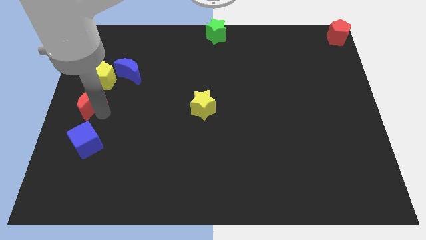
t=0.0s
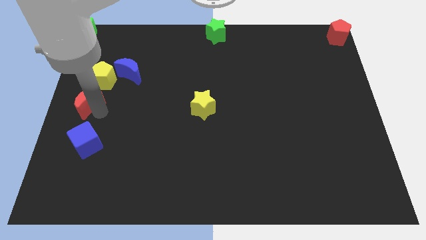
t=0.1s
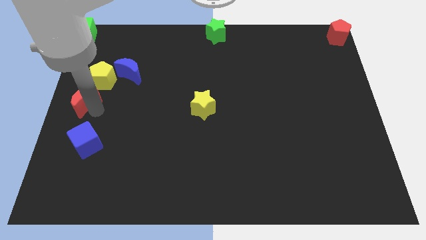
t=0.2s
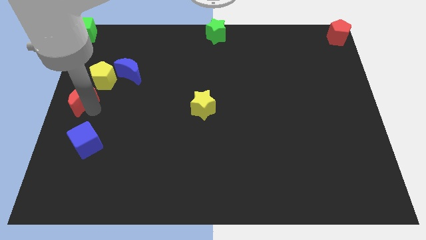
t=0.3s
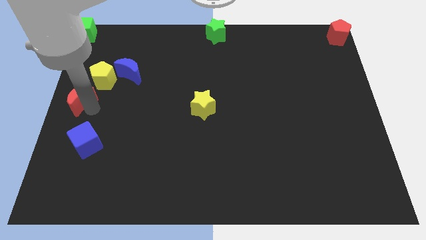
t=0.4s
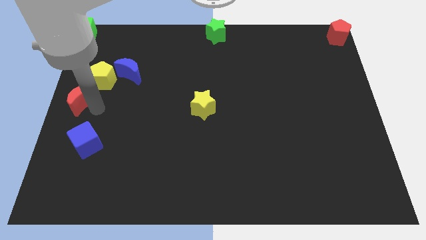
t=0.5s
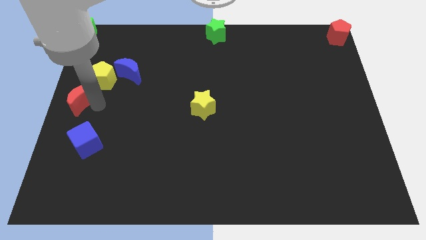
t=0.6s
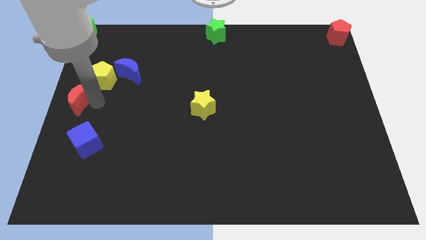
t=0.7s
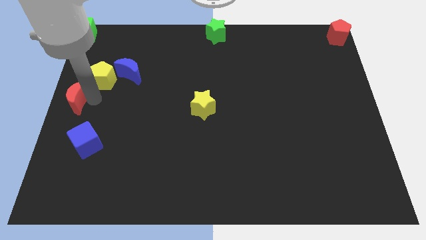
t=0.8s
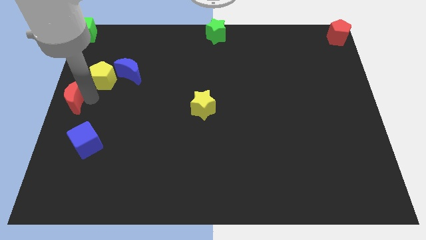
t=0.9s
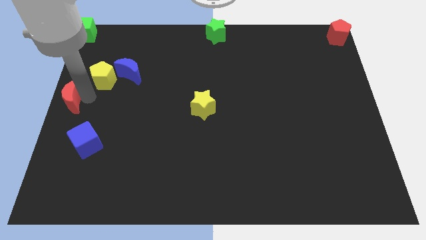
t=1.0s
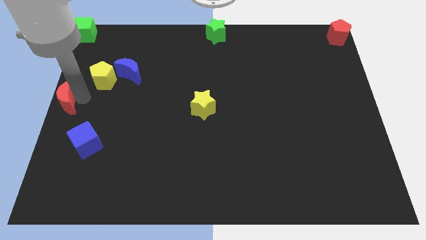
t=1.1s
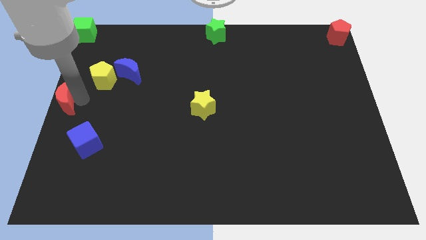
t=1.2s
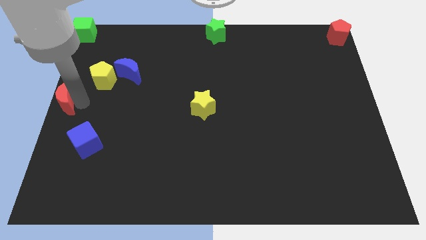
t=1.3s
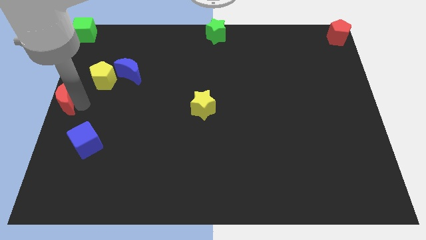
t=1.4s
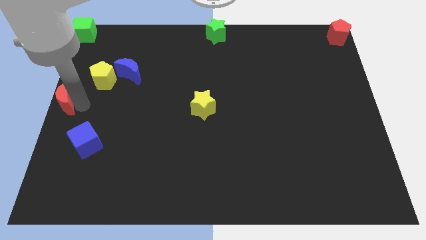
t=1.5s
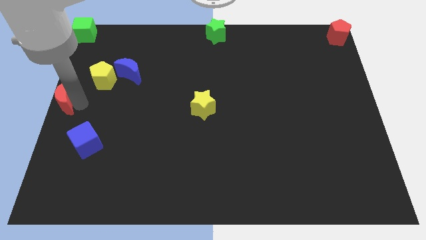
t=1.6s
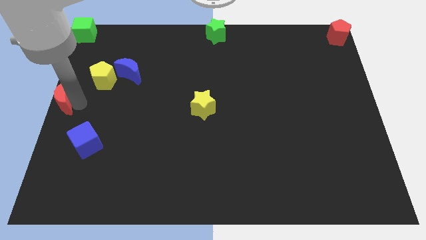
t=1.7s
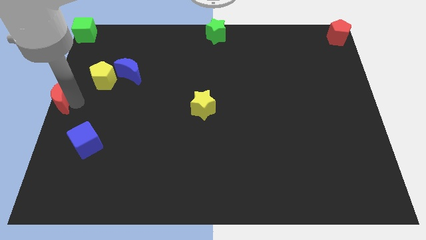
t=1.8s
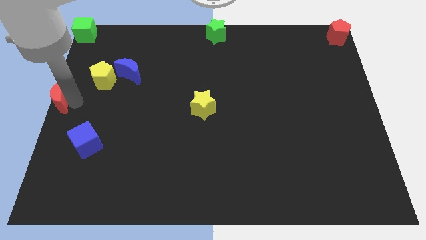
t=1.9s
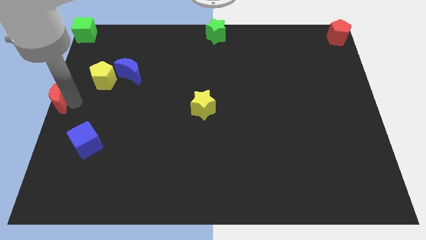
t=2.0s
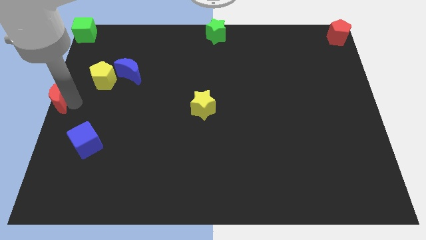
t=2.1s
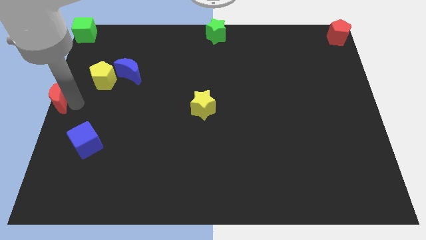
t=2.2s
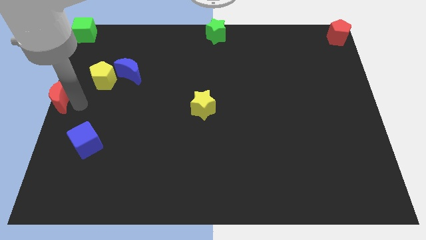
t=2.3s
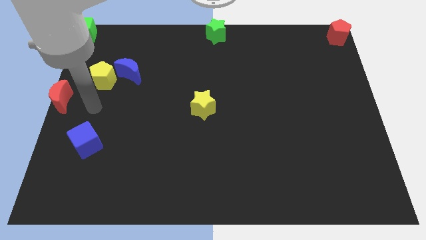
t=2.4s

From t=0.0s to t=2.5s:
push the red moon away from the middle of yellow pentagon and blue cube

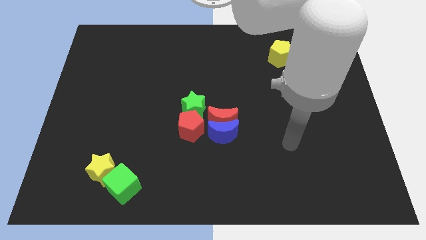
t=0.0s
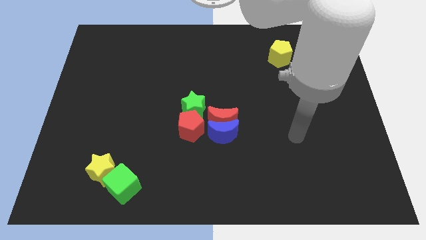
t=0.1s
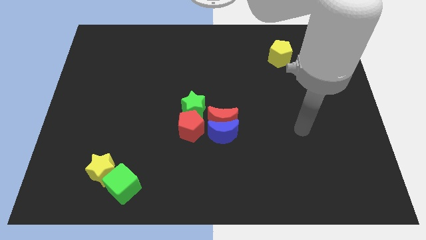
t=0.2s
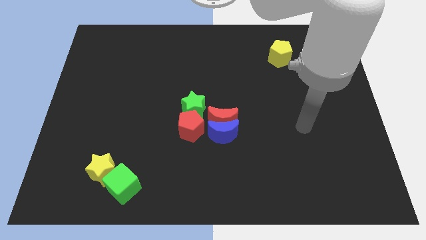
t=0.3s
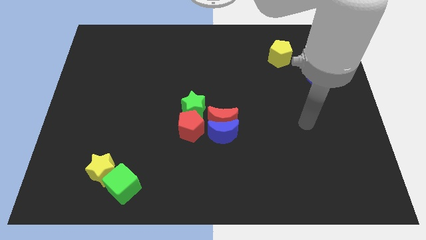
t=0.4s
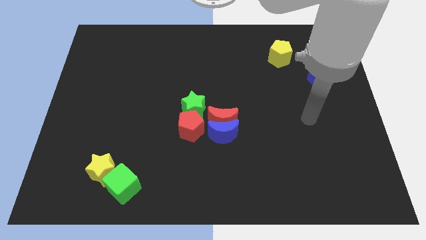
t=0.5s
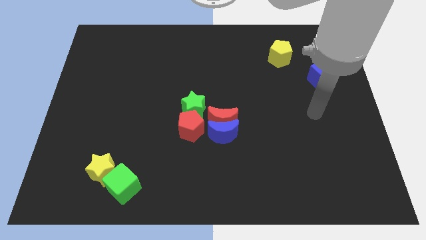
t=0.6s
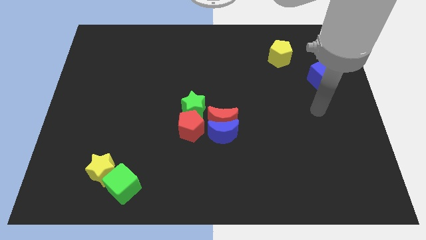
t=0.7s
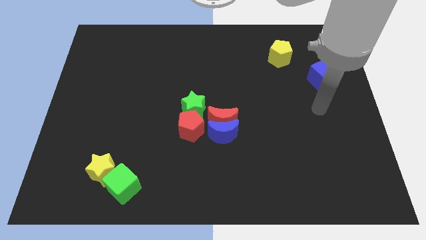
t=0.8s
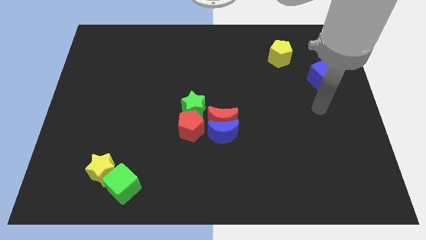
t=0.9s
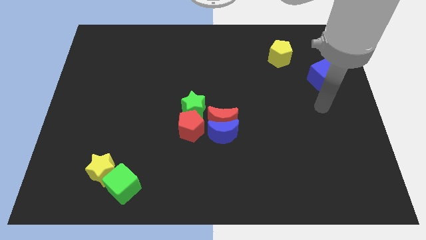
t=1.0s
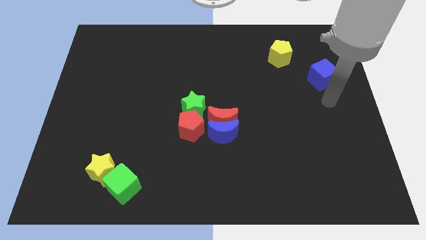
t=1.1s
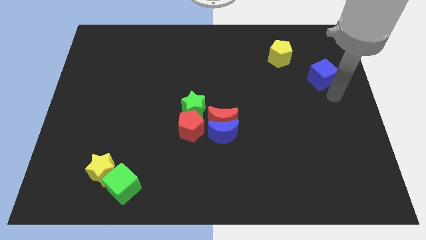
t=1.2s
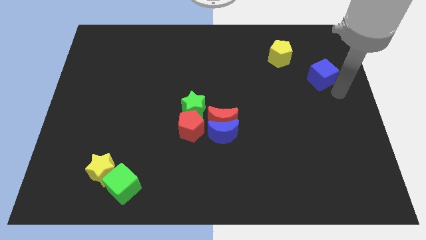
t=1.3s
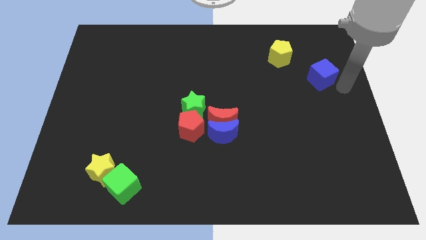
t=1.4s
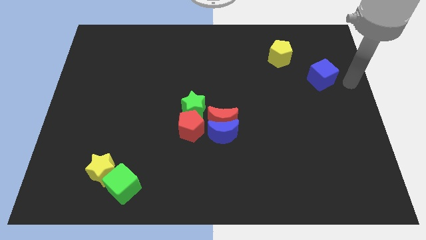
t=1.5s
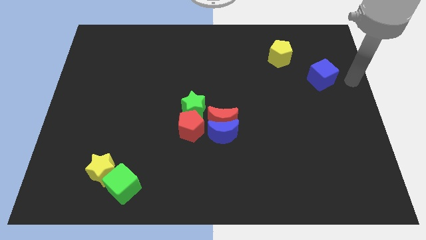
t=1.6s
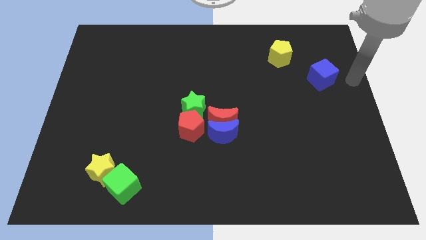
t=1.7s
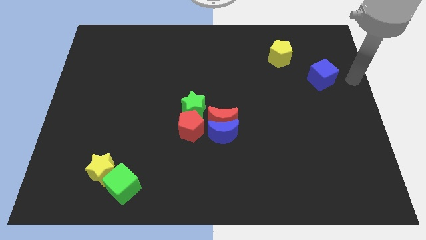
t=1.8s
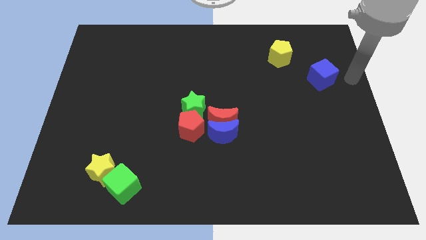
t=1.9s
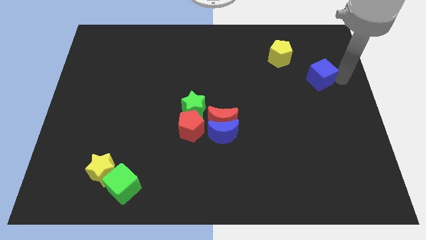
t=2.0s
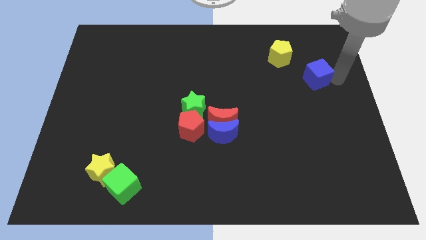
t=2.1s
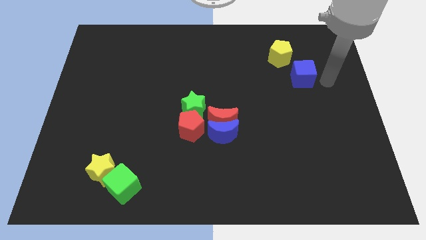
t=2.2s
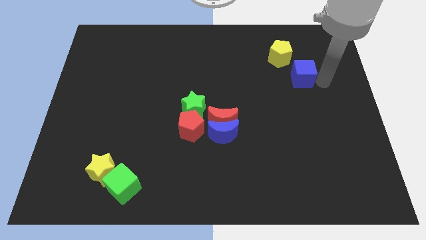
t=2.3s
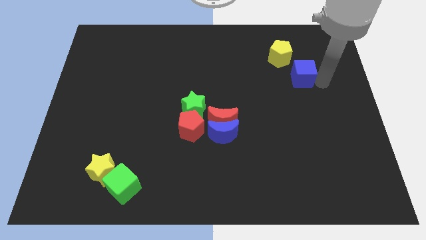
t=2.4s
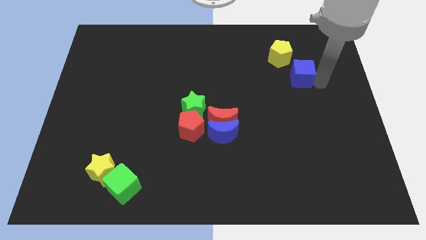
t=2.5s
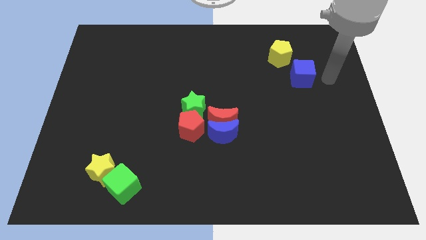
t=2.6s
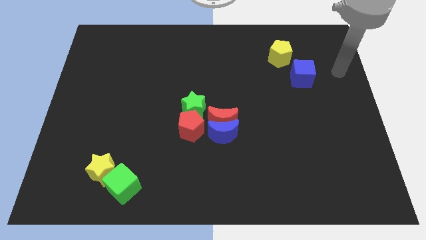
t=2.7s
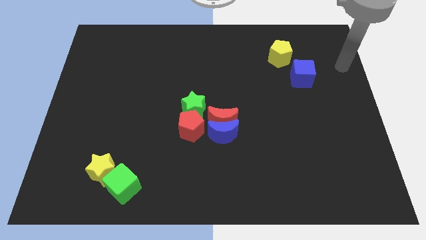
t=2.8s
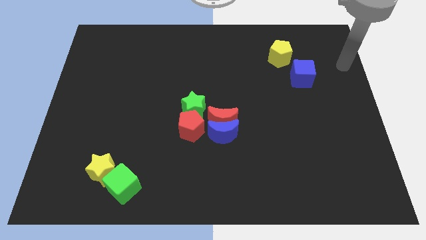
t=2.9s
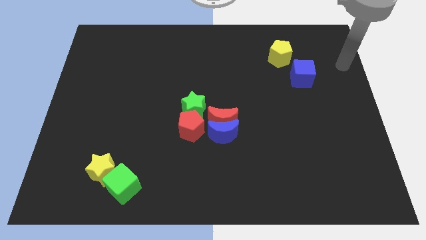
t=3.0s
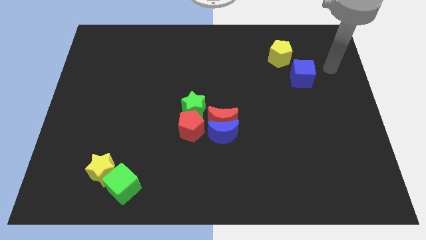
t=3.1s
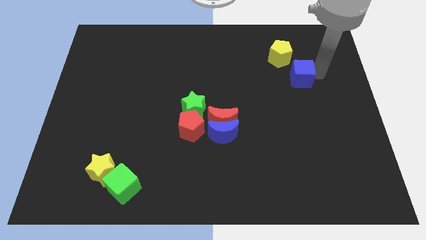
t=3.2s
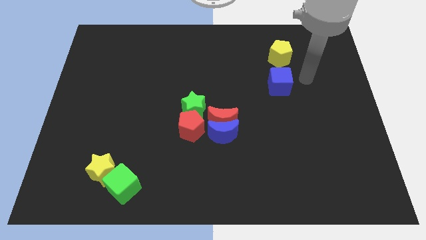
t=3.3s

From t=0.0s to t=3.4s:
place the blue cube to the bottom side of the yellow pentagon

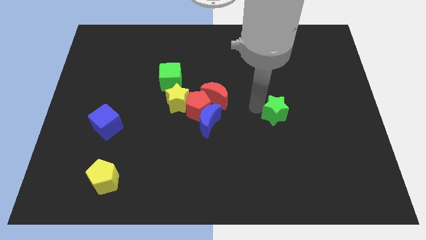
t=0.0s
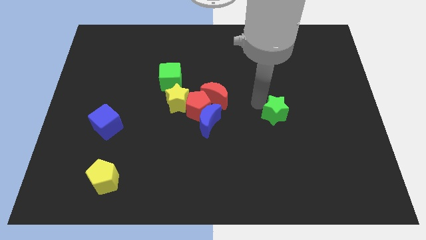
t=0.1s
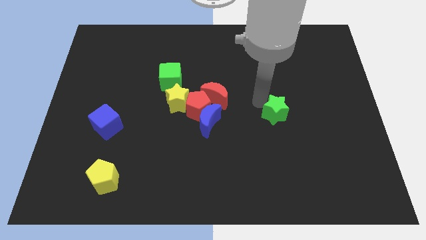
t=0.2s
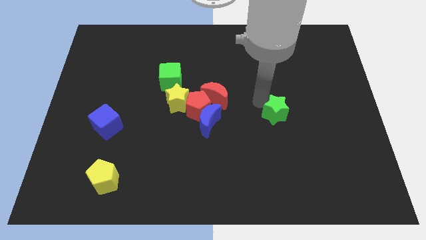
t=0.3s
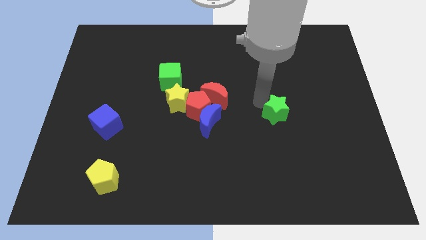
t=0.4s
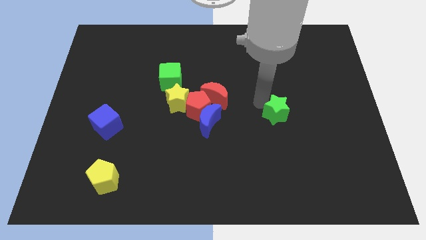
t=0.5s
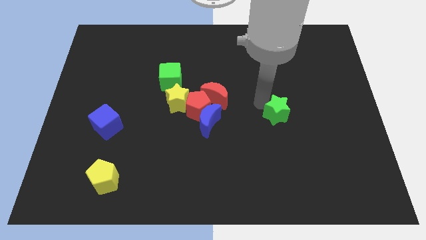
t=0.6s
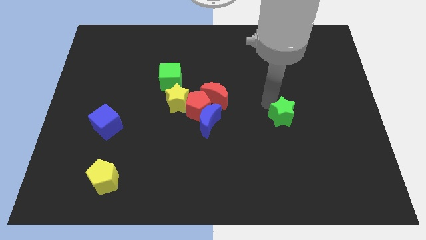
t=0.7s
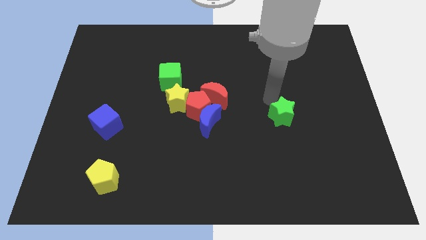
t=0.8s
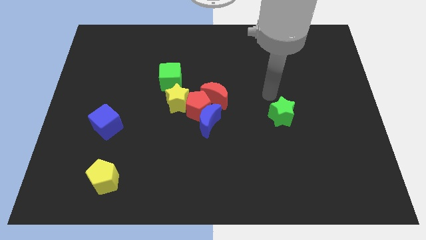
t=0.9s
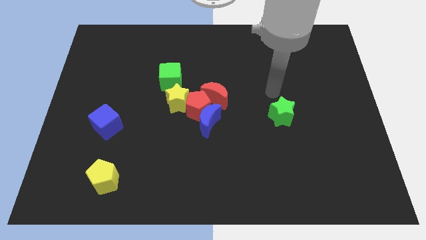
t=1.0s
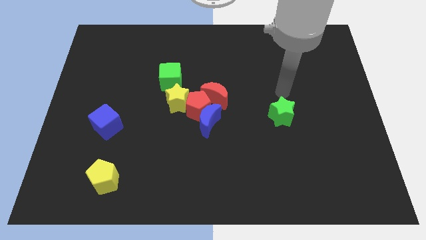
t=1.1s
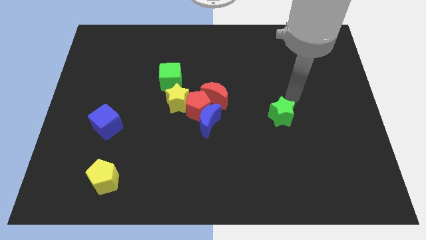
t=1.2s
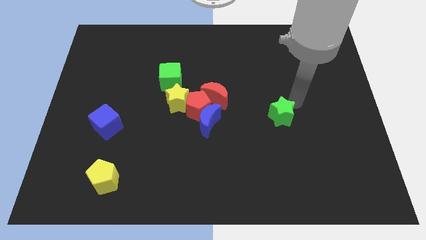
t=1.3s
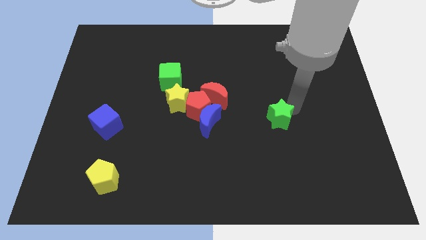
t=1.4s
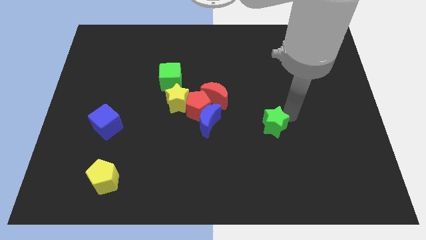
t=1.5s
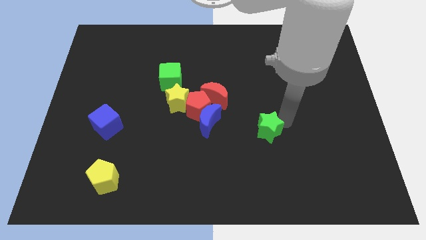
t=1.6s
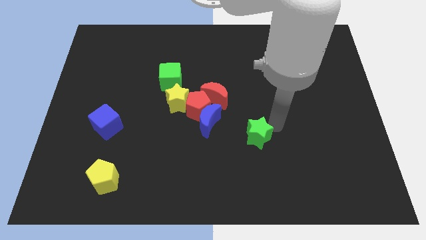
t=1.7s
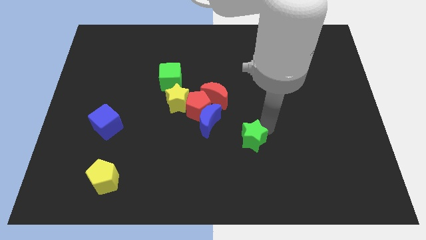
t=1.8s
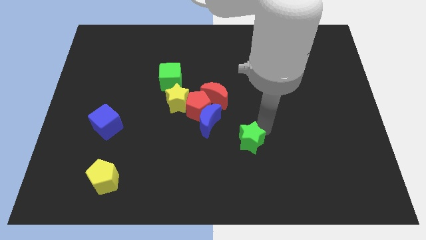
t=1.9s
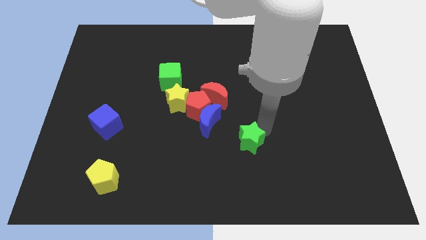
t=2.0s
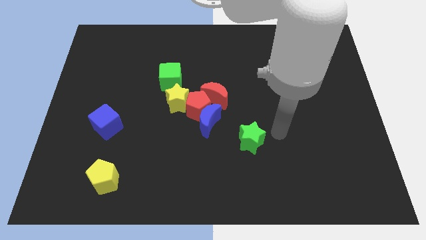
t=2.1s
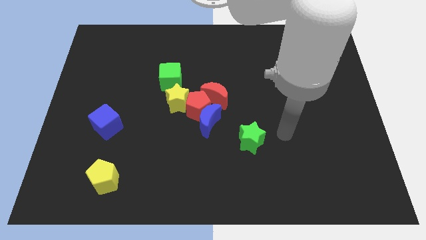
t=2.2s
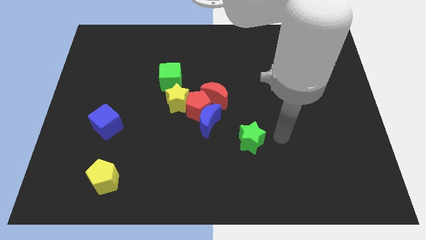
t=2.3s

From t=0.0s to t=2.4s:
drag green star diagonally downwards

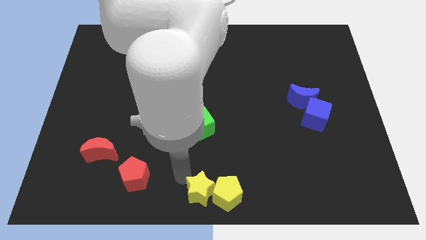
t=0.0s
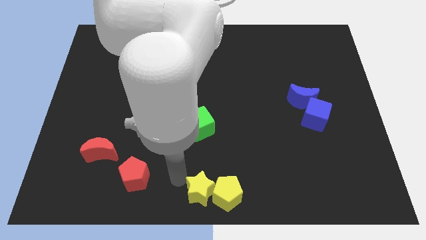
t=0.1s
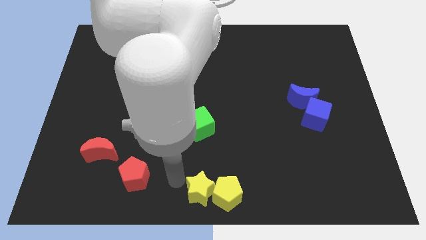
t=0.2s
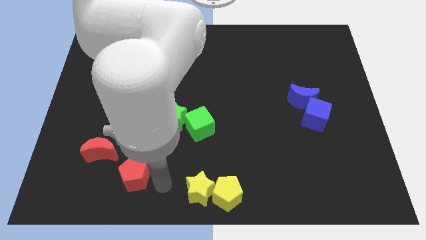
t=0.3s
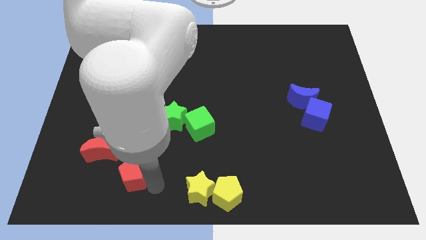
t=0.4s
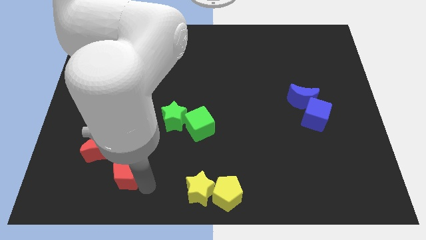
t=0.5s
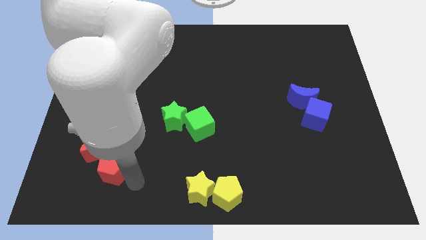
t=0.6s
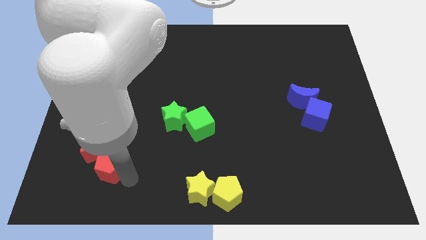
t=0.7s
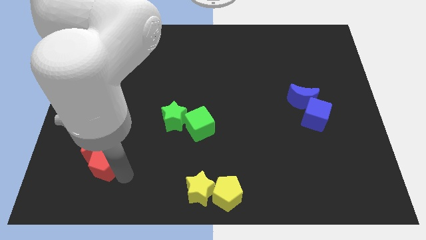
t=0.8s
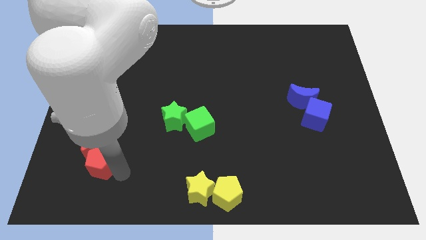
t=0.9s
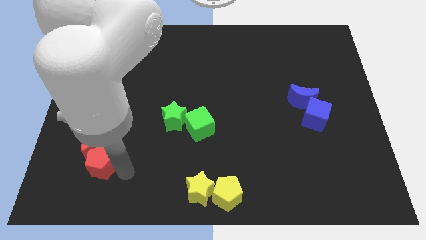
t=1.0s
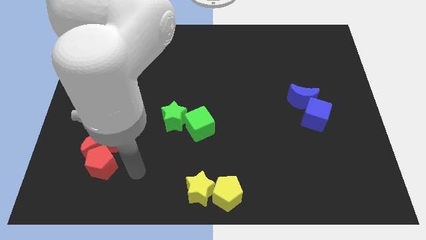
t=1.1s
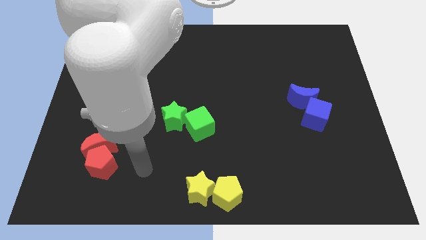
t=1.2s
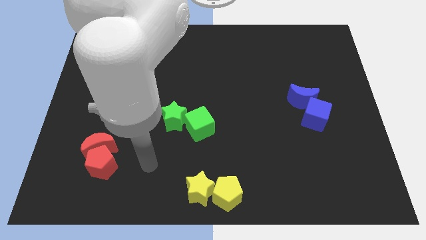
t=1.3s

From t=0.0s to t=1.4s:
push the two red blocks together
